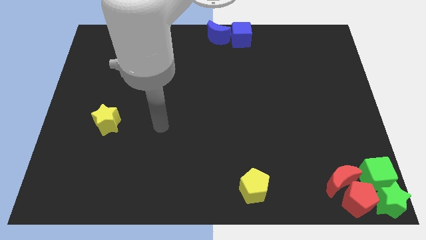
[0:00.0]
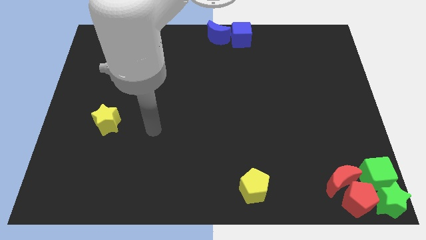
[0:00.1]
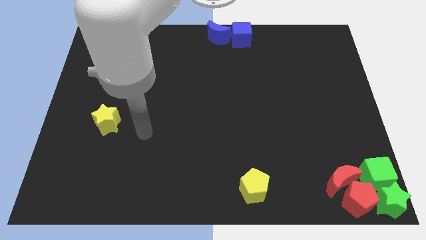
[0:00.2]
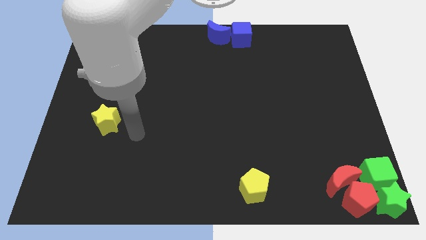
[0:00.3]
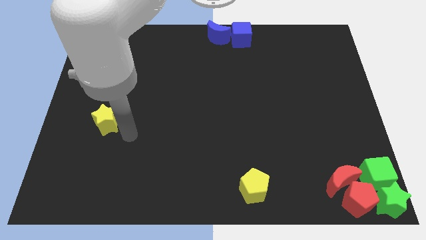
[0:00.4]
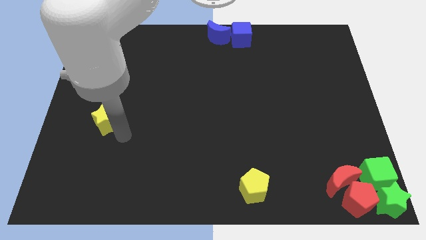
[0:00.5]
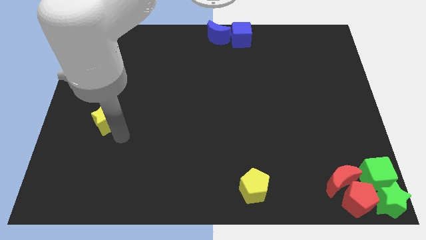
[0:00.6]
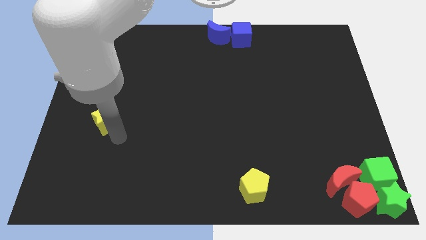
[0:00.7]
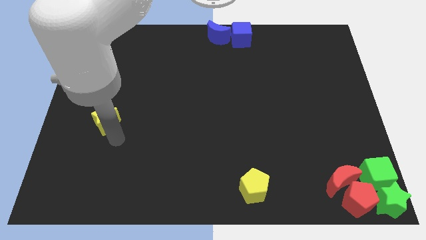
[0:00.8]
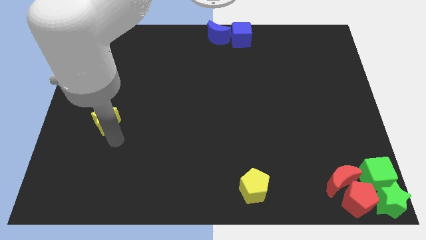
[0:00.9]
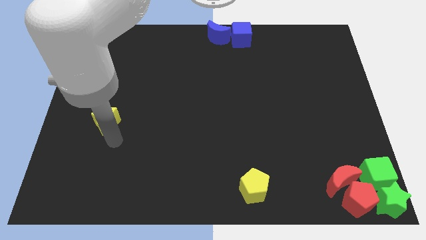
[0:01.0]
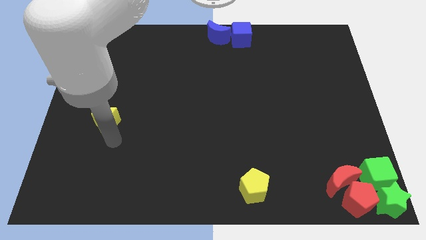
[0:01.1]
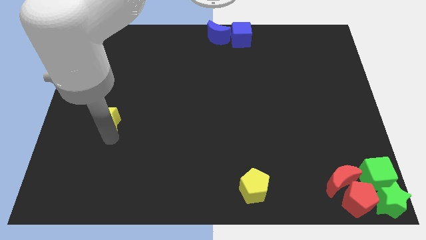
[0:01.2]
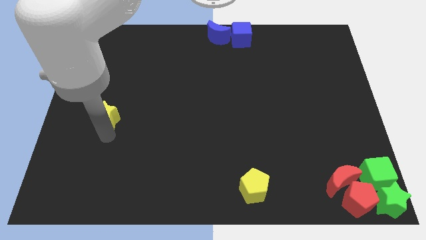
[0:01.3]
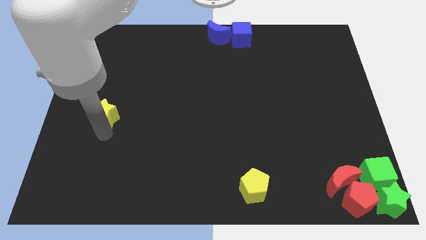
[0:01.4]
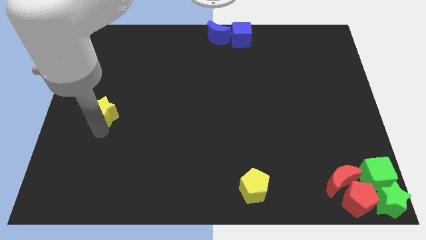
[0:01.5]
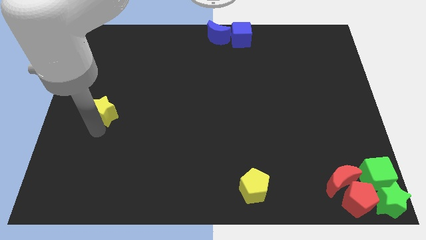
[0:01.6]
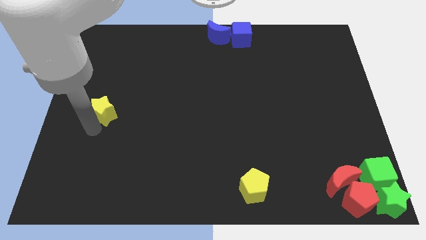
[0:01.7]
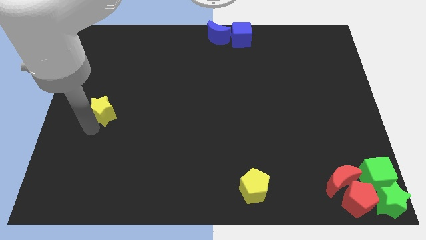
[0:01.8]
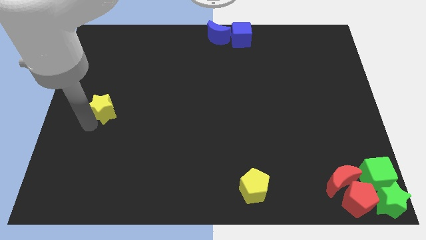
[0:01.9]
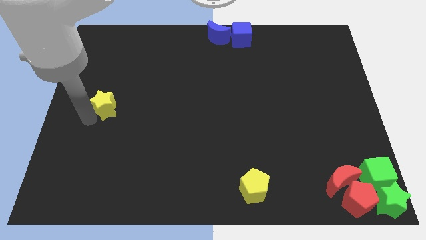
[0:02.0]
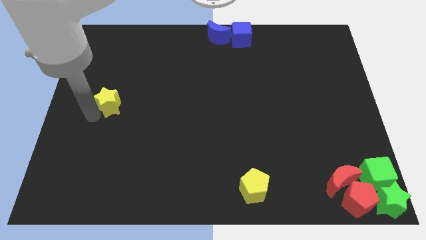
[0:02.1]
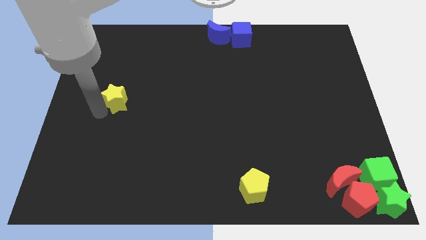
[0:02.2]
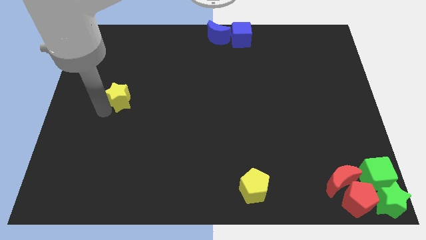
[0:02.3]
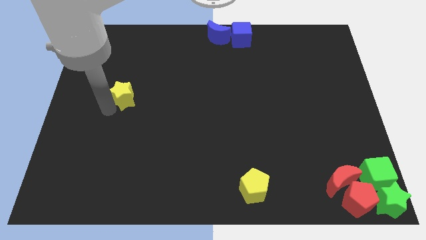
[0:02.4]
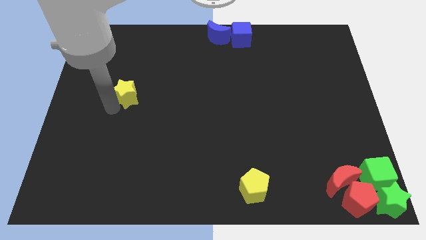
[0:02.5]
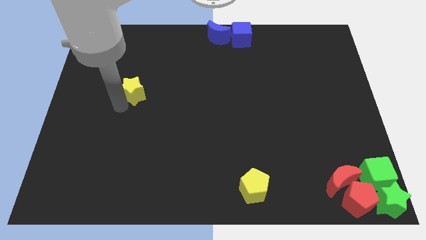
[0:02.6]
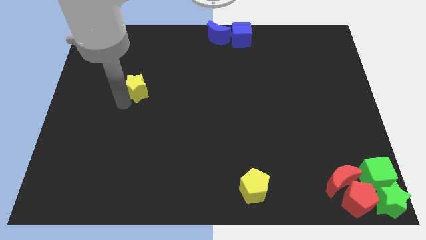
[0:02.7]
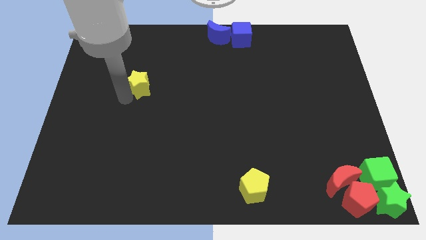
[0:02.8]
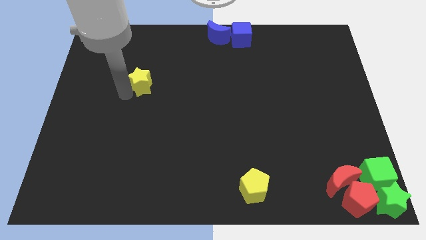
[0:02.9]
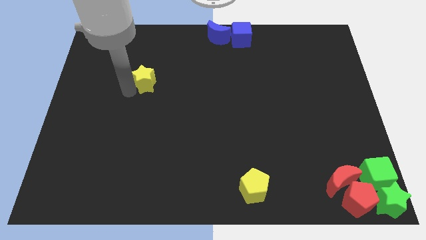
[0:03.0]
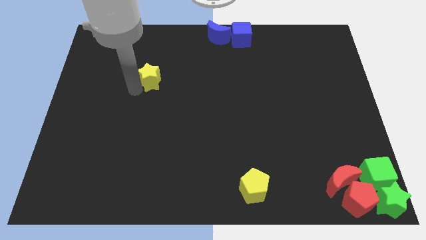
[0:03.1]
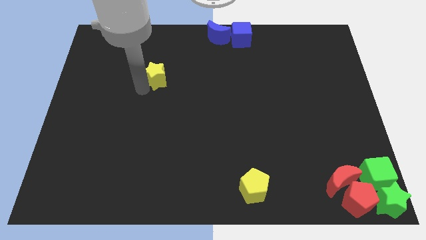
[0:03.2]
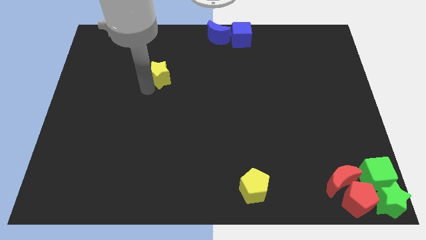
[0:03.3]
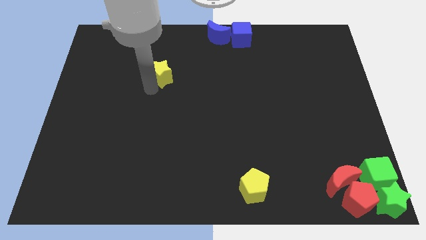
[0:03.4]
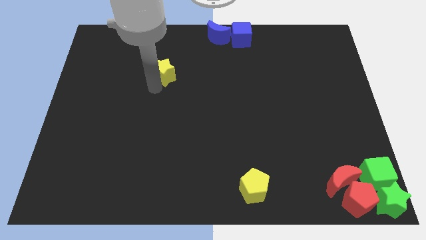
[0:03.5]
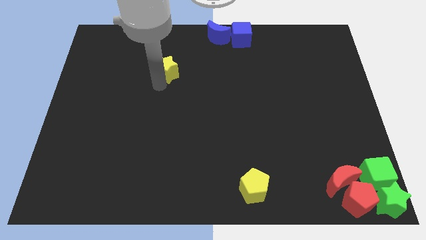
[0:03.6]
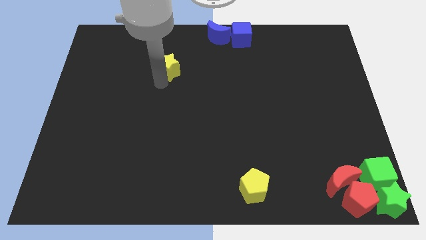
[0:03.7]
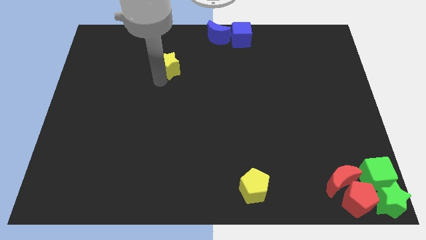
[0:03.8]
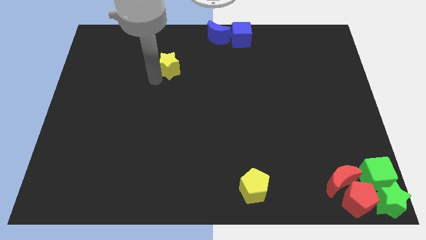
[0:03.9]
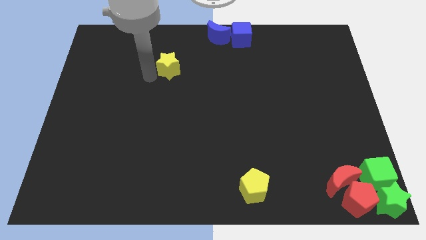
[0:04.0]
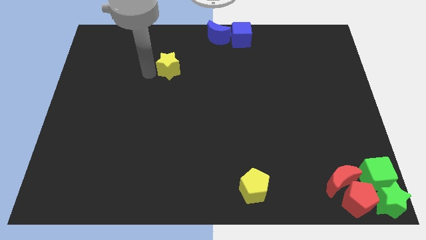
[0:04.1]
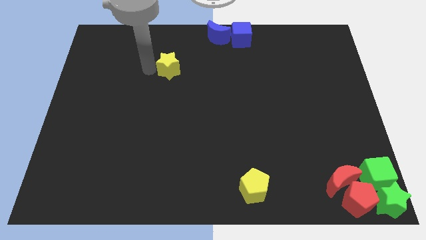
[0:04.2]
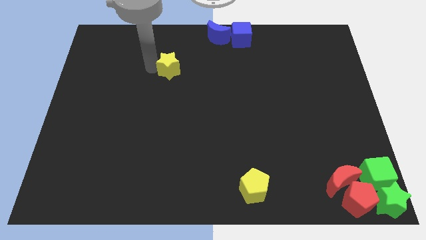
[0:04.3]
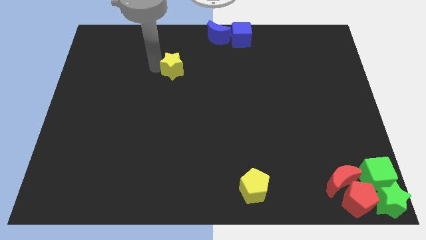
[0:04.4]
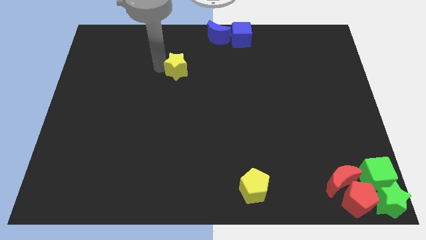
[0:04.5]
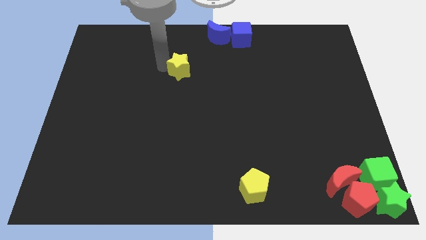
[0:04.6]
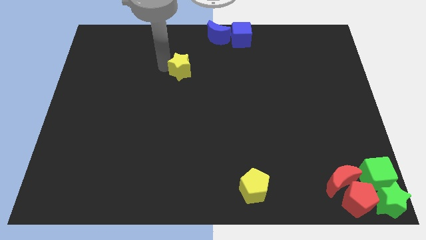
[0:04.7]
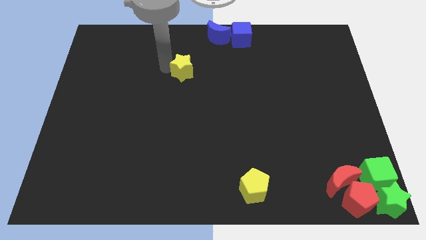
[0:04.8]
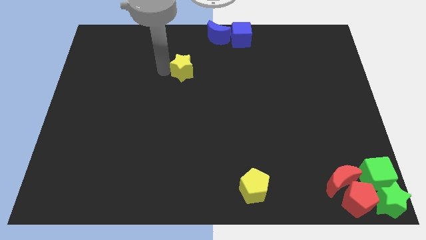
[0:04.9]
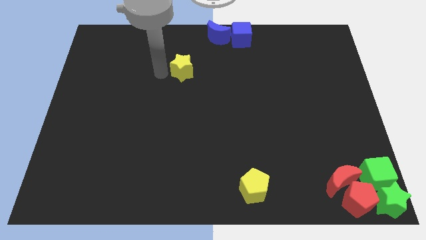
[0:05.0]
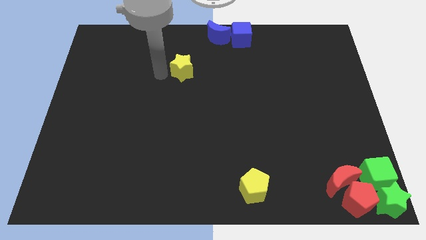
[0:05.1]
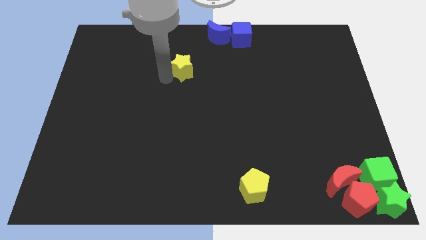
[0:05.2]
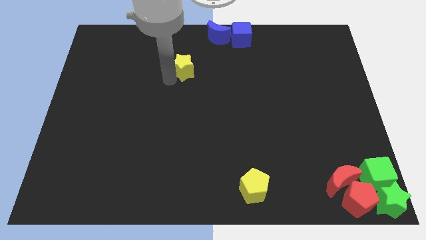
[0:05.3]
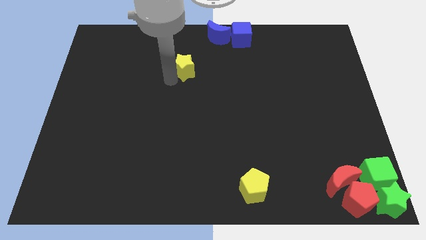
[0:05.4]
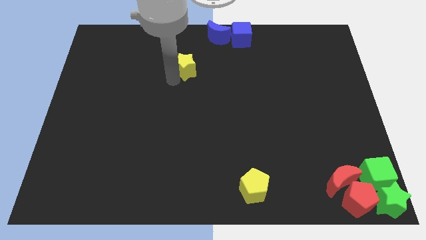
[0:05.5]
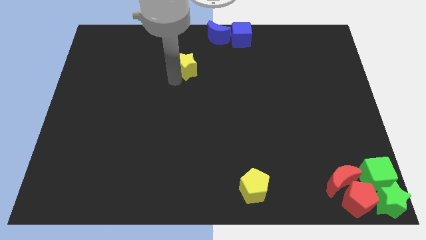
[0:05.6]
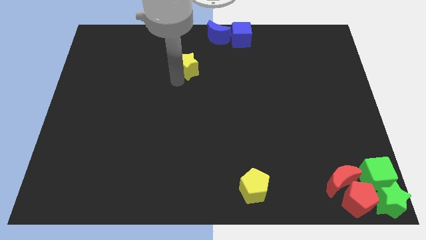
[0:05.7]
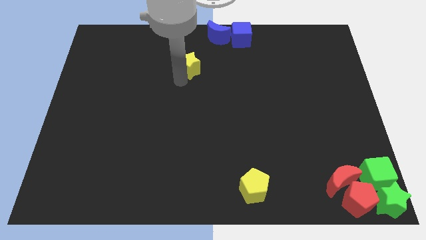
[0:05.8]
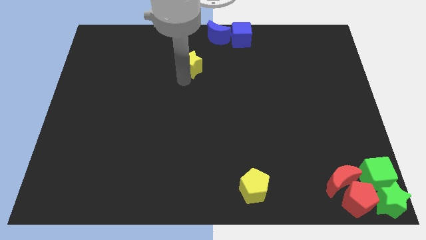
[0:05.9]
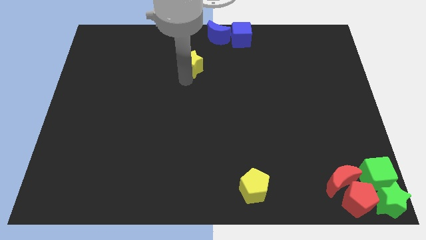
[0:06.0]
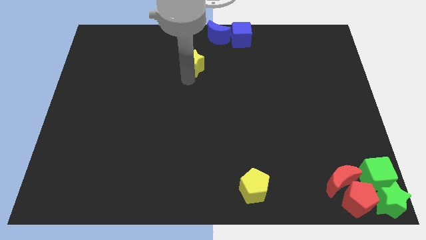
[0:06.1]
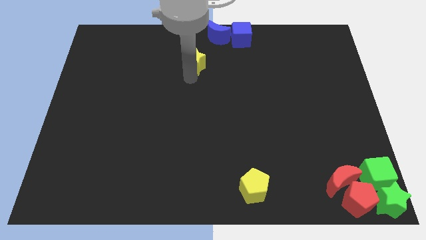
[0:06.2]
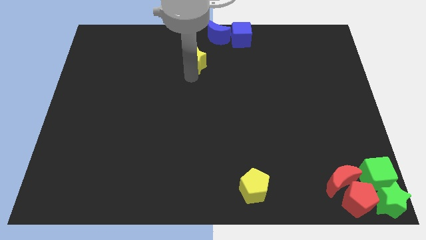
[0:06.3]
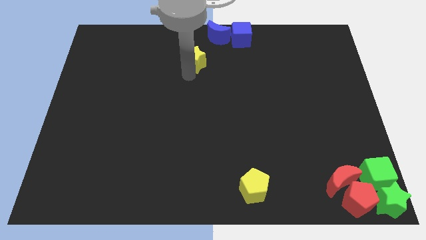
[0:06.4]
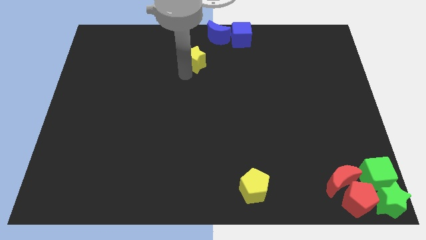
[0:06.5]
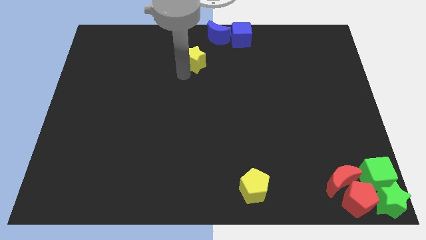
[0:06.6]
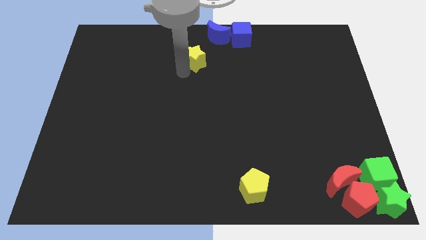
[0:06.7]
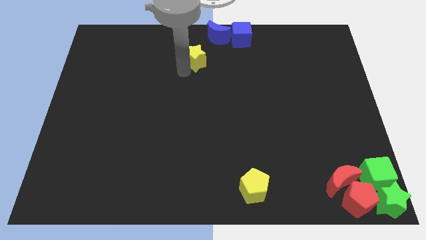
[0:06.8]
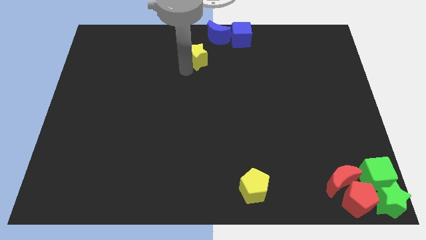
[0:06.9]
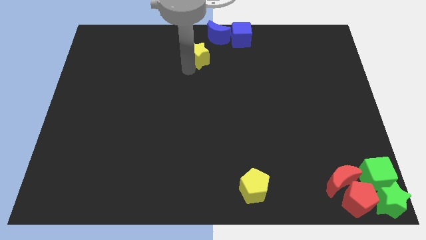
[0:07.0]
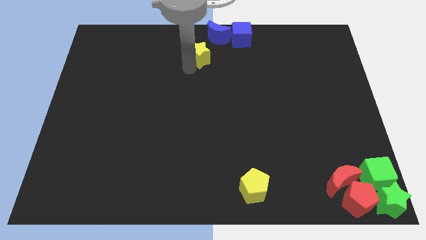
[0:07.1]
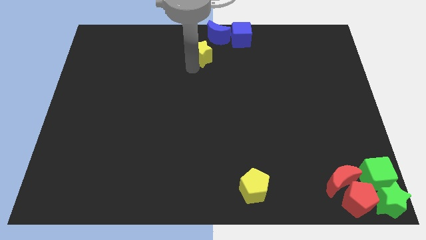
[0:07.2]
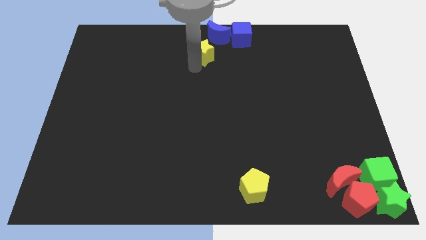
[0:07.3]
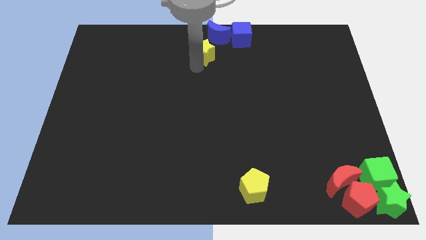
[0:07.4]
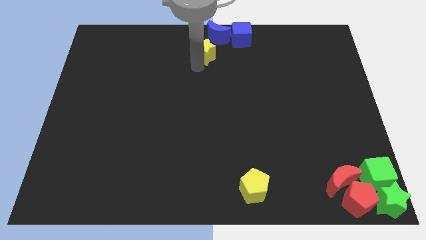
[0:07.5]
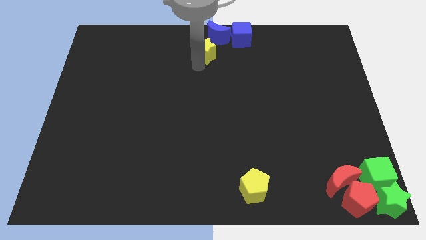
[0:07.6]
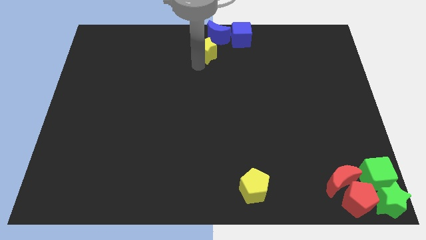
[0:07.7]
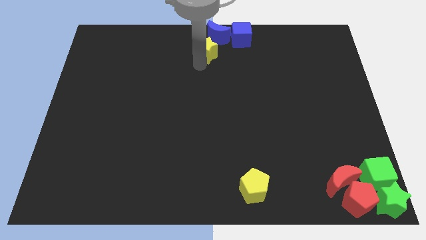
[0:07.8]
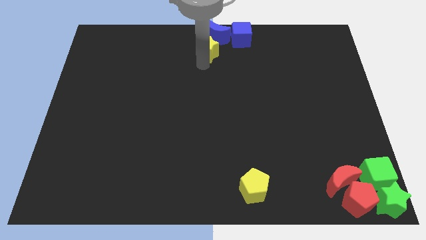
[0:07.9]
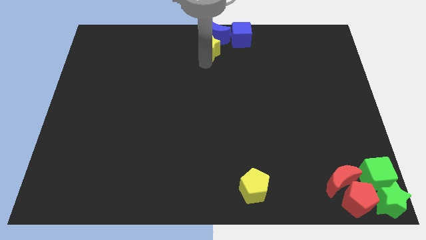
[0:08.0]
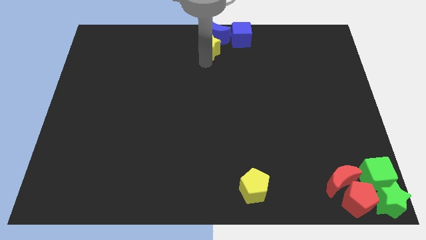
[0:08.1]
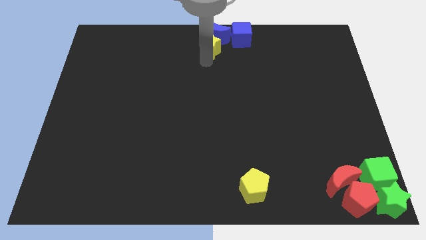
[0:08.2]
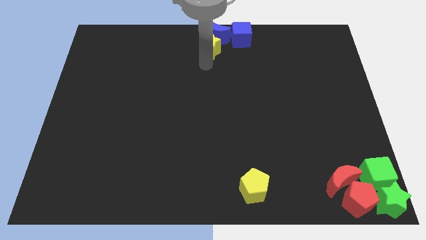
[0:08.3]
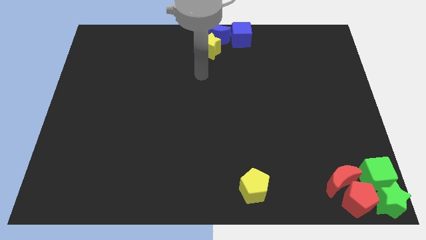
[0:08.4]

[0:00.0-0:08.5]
move the yellow star closer to the blue crescent

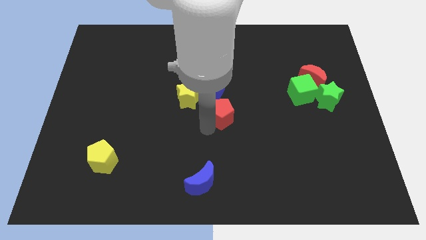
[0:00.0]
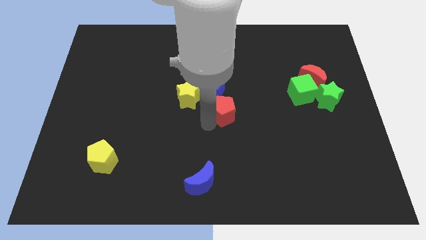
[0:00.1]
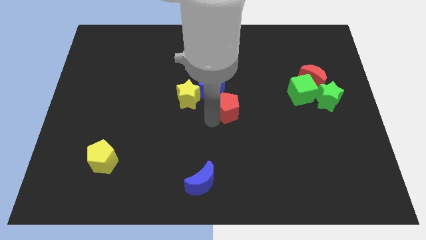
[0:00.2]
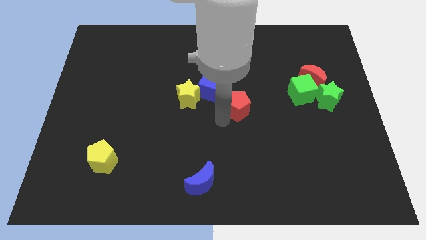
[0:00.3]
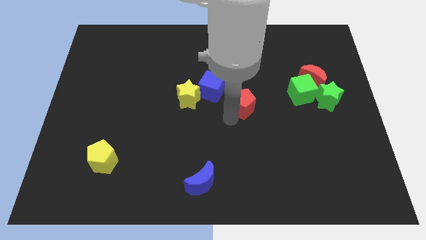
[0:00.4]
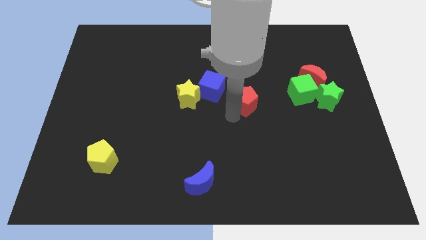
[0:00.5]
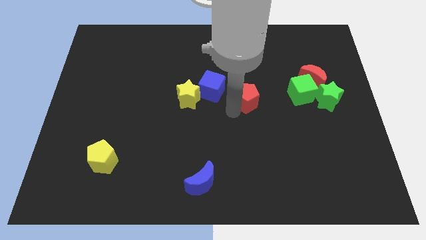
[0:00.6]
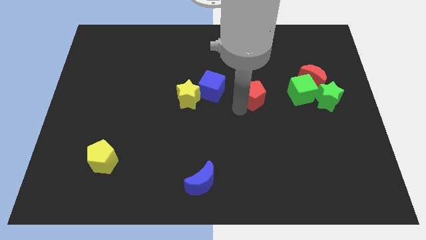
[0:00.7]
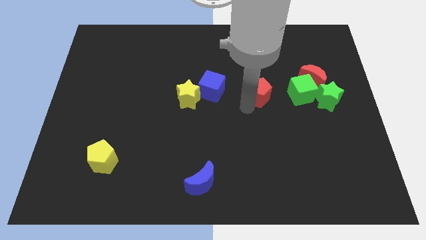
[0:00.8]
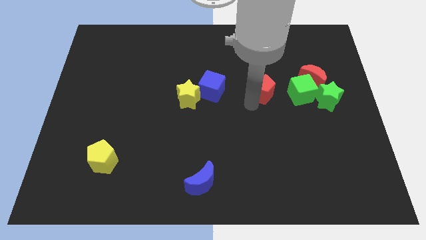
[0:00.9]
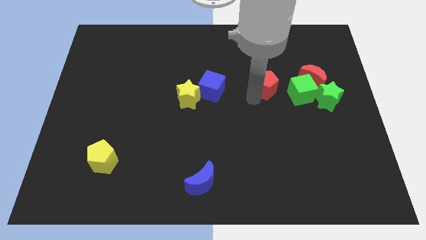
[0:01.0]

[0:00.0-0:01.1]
put the red pentagon in between the blue and green cubes
